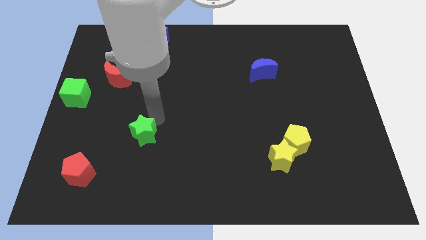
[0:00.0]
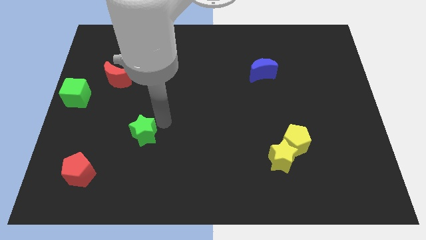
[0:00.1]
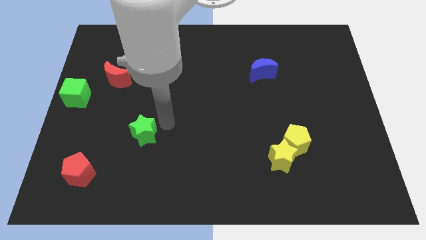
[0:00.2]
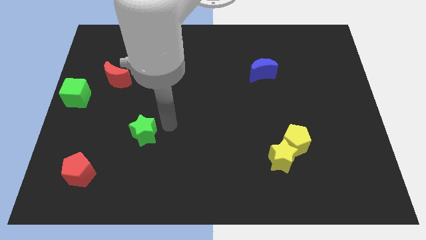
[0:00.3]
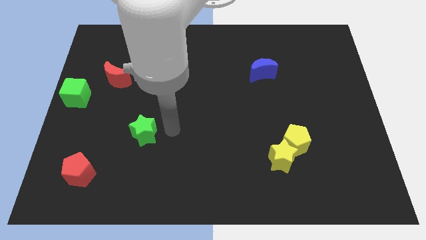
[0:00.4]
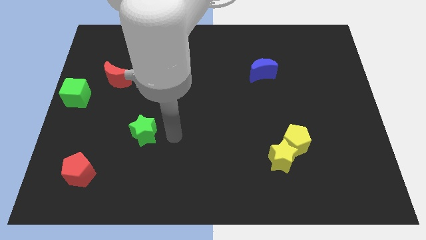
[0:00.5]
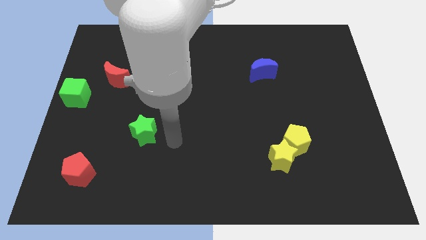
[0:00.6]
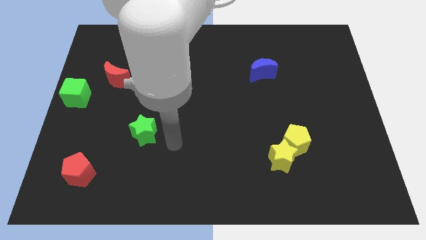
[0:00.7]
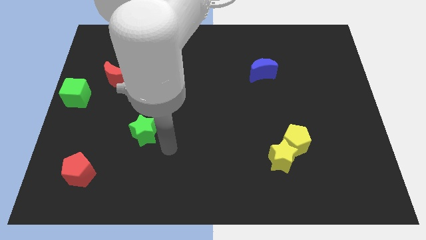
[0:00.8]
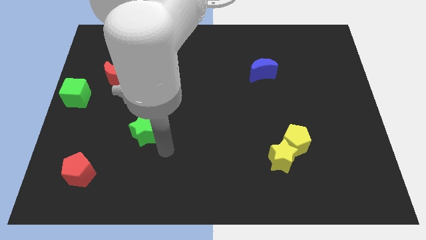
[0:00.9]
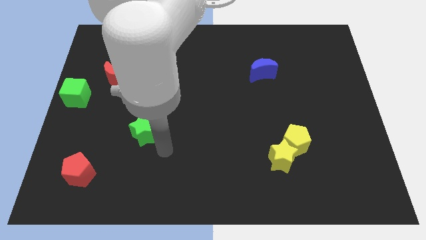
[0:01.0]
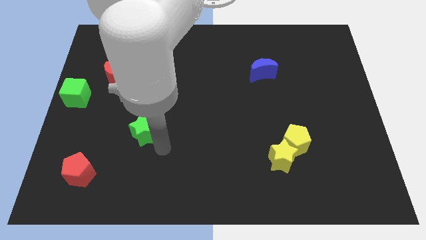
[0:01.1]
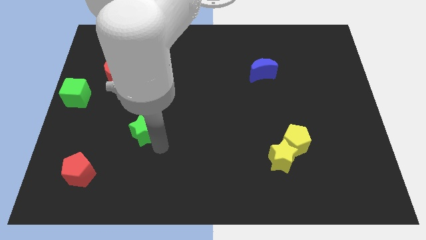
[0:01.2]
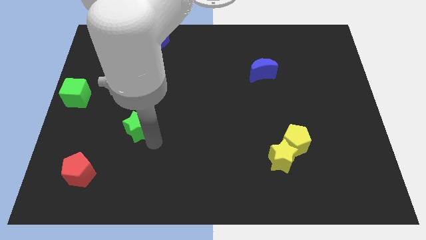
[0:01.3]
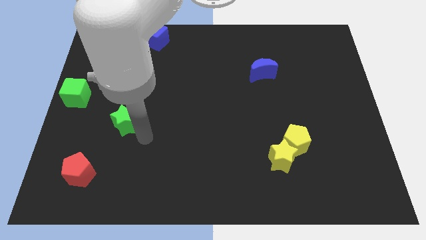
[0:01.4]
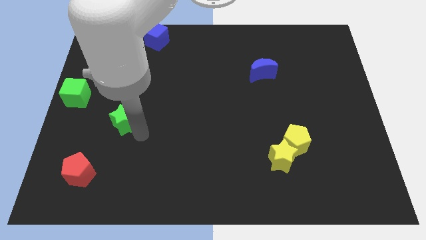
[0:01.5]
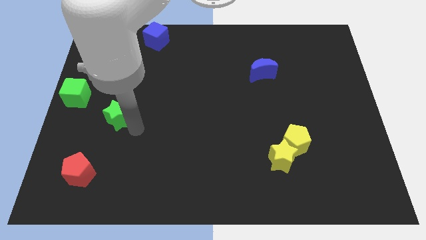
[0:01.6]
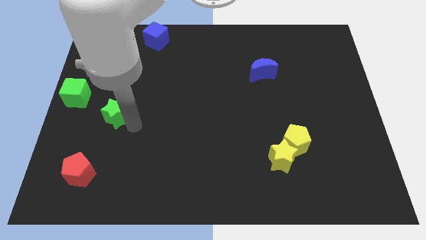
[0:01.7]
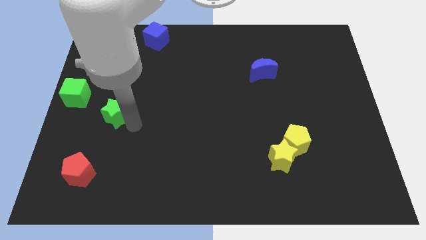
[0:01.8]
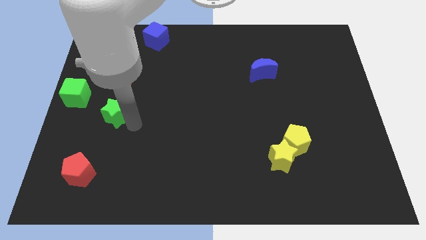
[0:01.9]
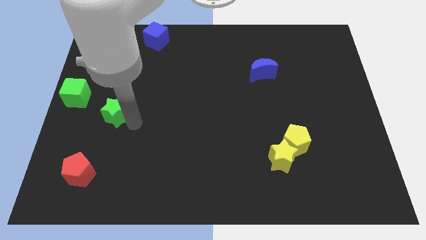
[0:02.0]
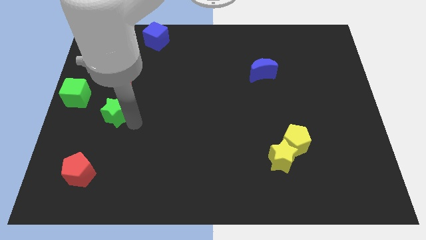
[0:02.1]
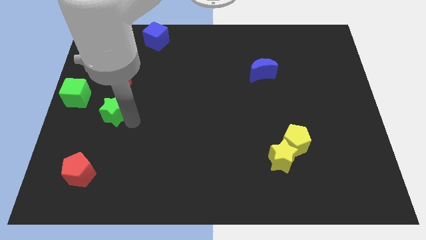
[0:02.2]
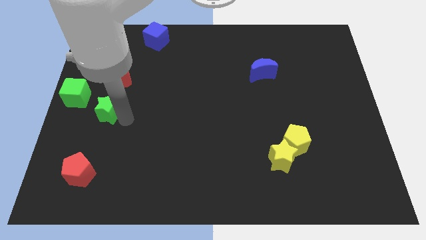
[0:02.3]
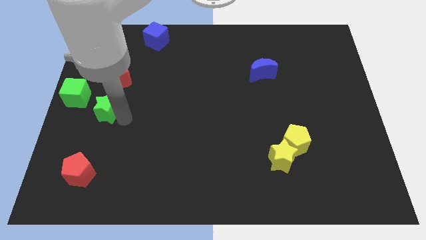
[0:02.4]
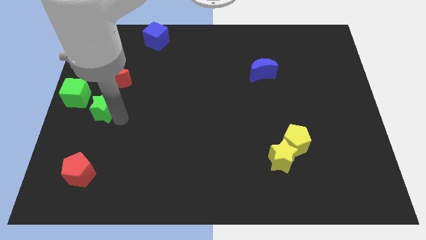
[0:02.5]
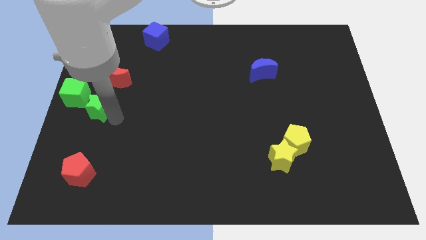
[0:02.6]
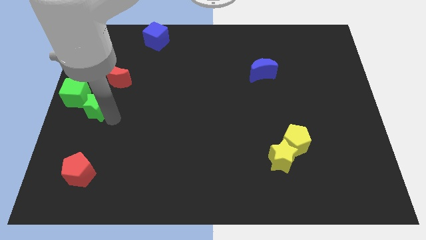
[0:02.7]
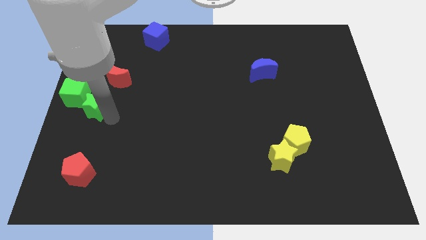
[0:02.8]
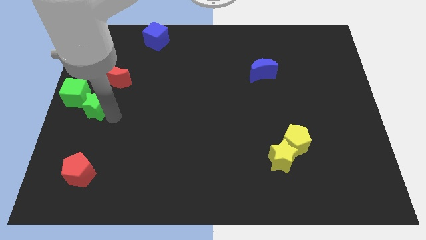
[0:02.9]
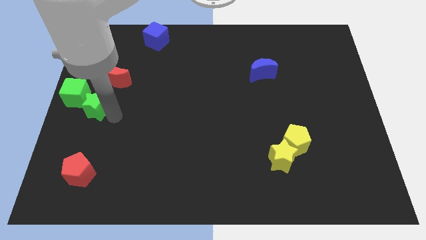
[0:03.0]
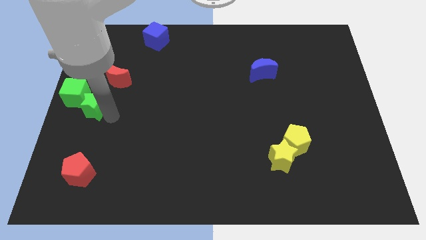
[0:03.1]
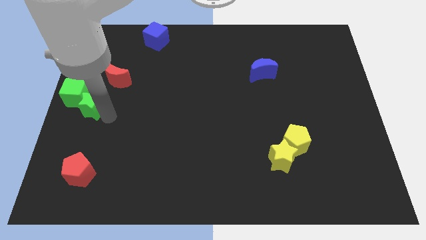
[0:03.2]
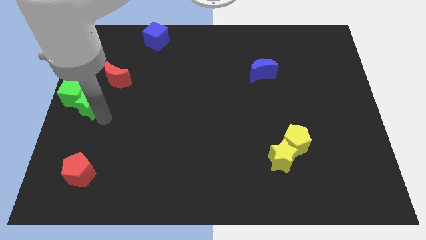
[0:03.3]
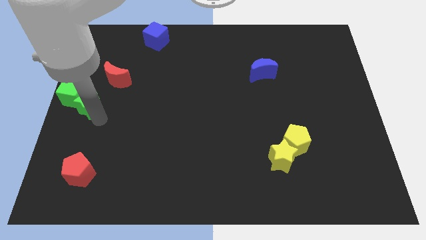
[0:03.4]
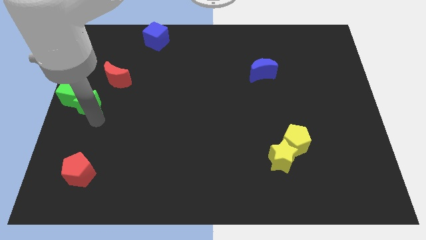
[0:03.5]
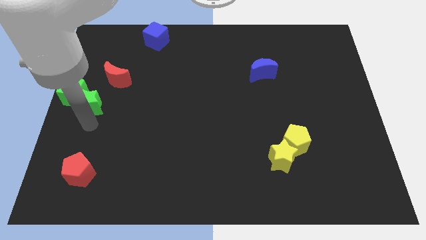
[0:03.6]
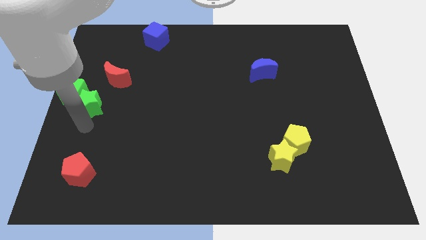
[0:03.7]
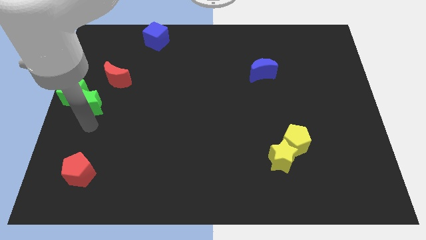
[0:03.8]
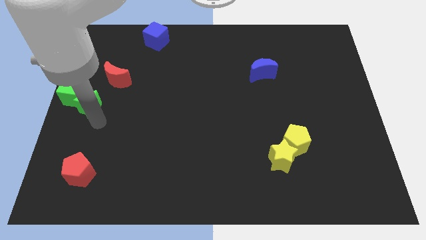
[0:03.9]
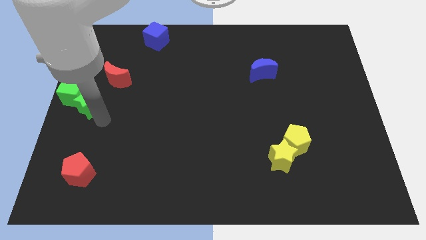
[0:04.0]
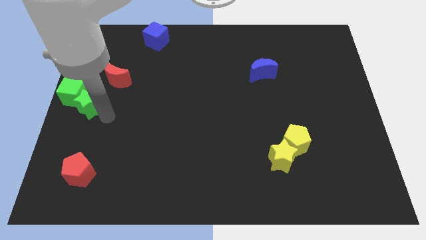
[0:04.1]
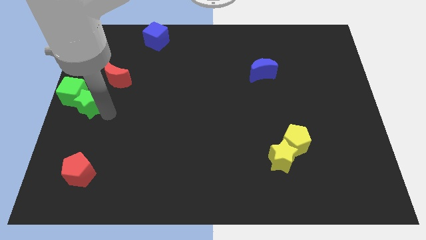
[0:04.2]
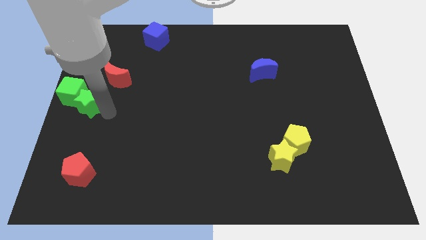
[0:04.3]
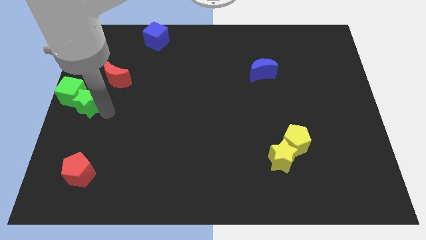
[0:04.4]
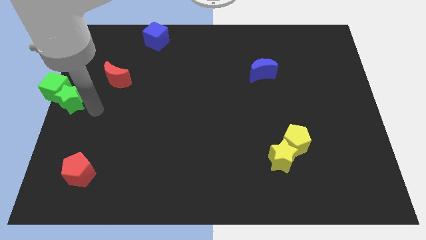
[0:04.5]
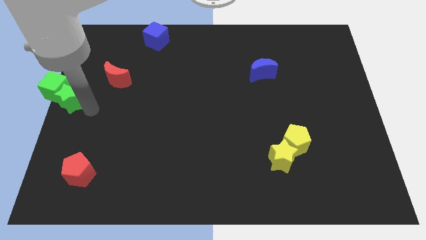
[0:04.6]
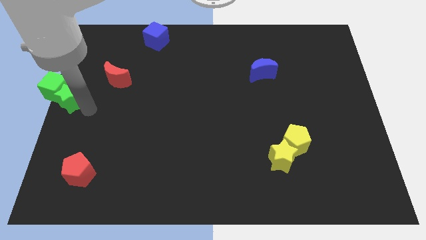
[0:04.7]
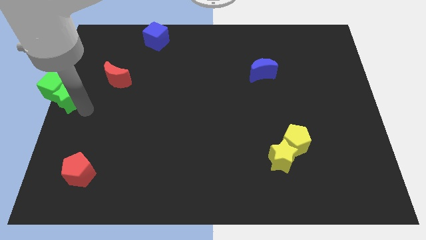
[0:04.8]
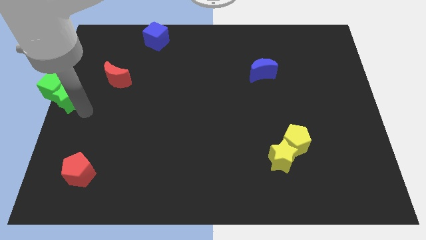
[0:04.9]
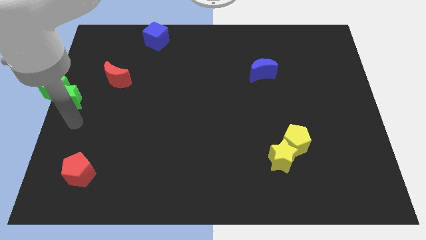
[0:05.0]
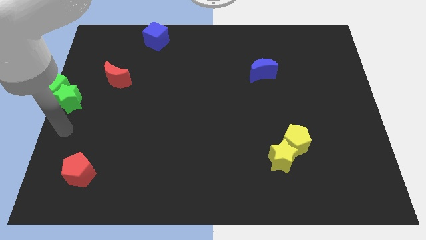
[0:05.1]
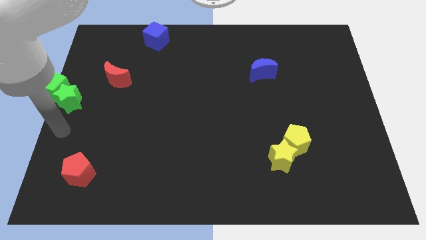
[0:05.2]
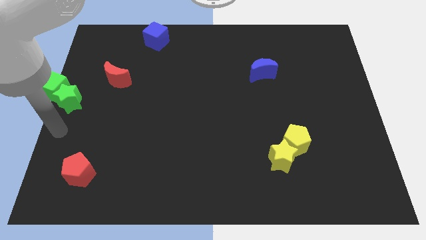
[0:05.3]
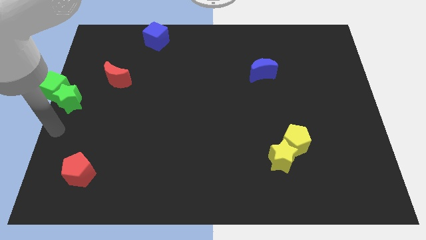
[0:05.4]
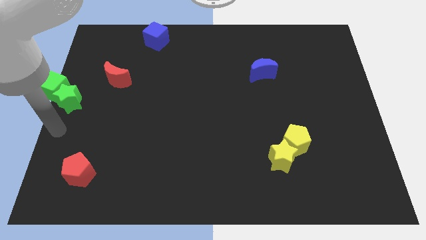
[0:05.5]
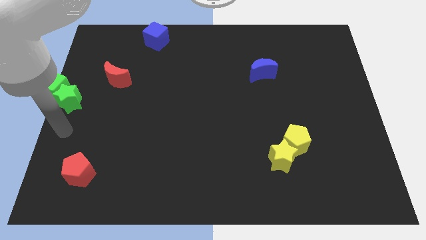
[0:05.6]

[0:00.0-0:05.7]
push green star into the green cube

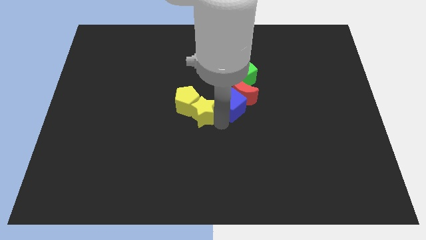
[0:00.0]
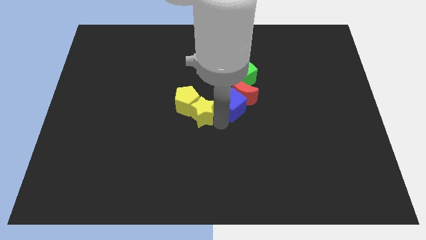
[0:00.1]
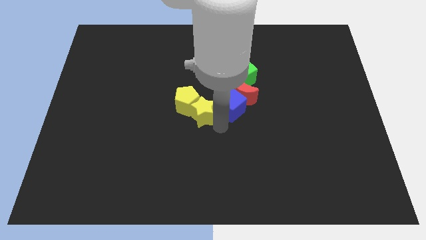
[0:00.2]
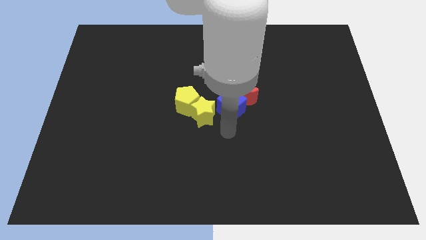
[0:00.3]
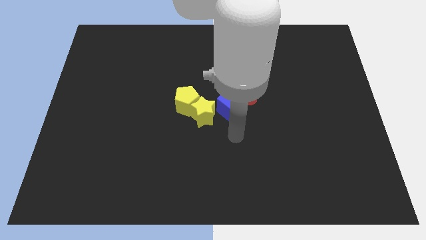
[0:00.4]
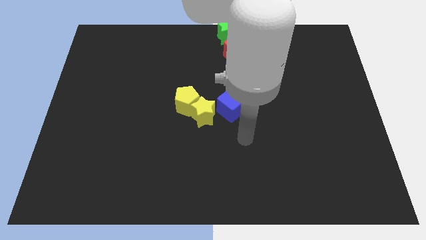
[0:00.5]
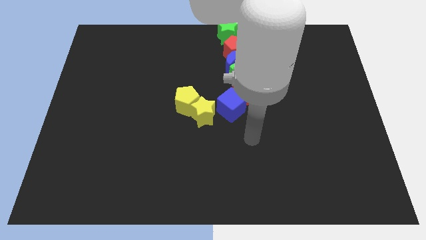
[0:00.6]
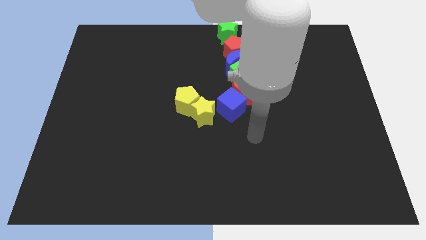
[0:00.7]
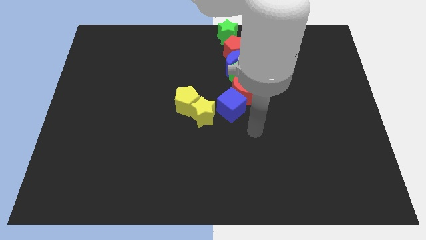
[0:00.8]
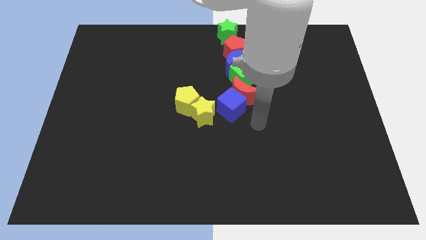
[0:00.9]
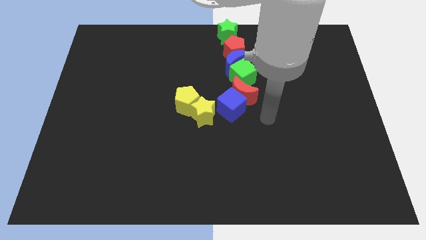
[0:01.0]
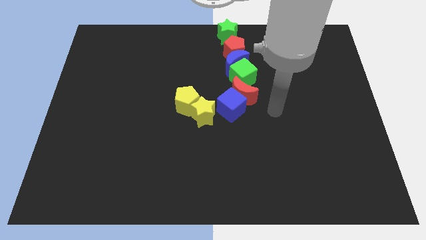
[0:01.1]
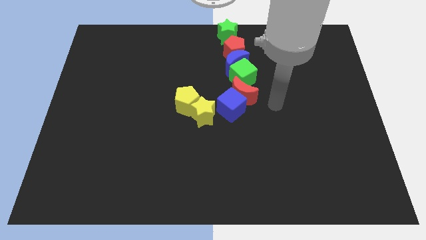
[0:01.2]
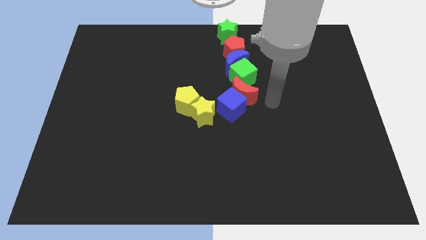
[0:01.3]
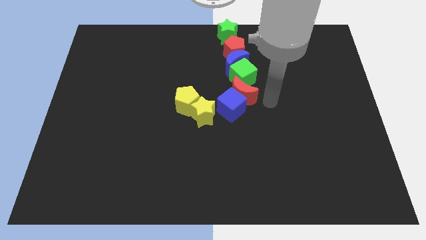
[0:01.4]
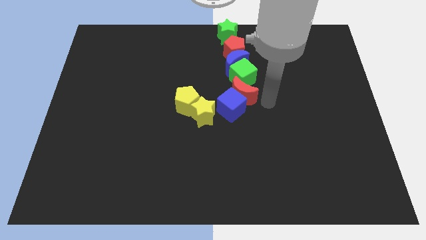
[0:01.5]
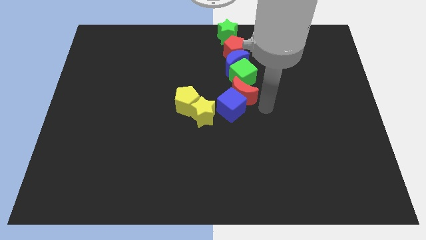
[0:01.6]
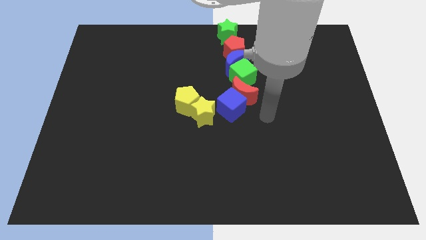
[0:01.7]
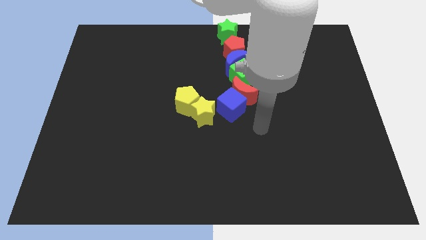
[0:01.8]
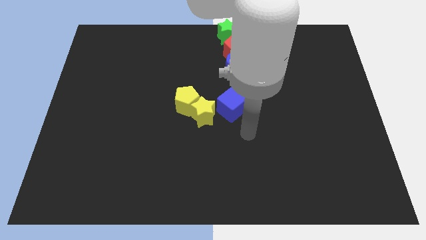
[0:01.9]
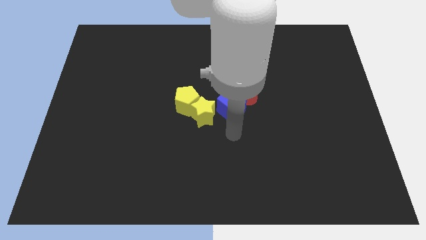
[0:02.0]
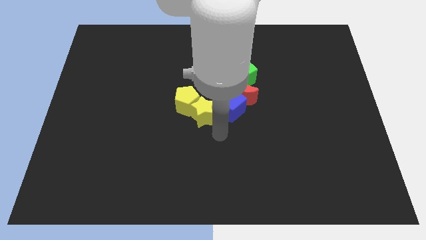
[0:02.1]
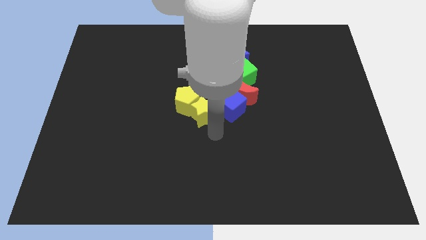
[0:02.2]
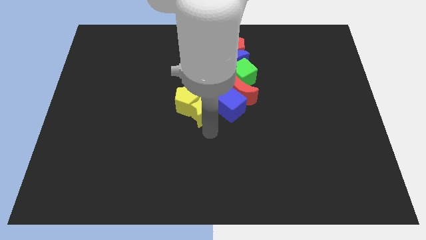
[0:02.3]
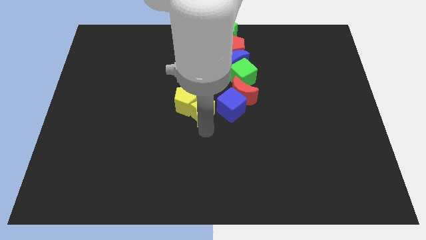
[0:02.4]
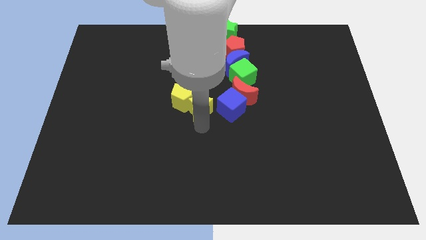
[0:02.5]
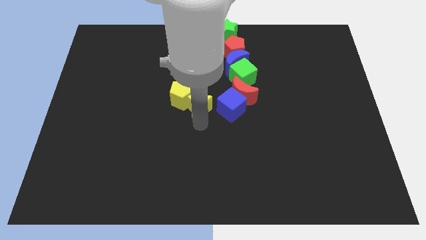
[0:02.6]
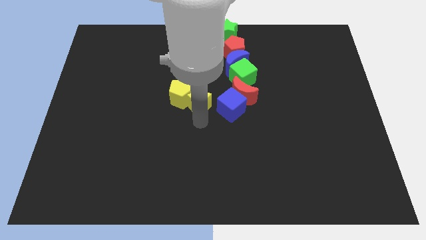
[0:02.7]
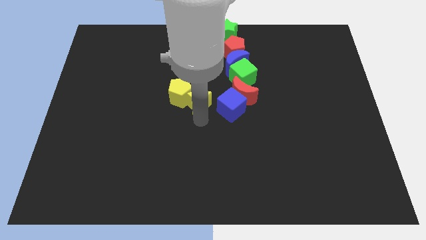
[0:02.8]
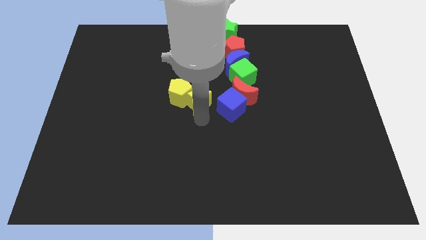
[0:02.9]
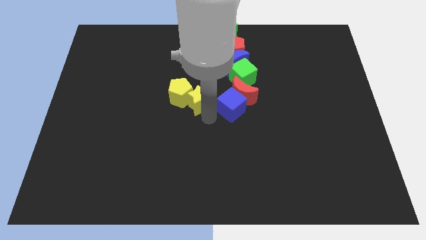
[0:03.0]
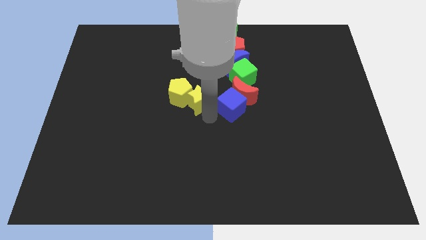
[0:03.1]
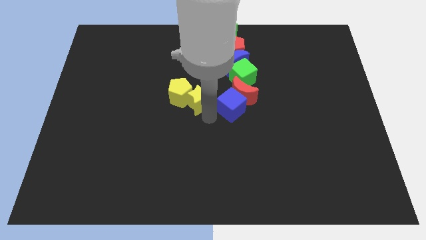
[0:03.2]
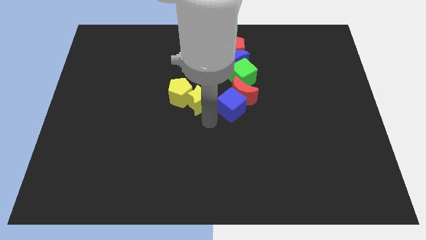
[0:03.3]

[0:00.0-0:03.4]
push the yellow blocks towards the top side
